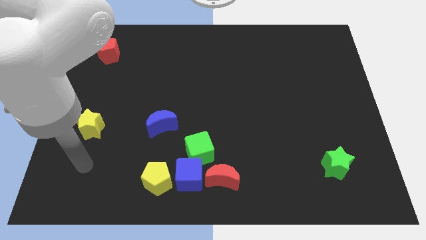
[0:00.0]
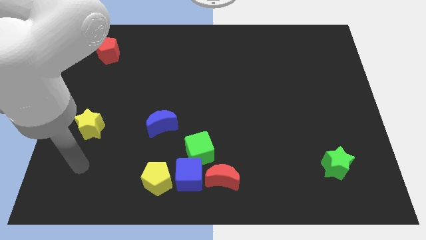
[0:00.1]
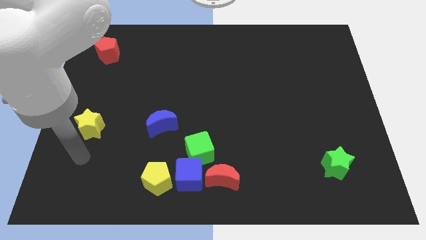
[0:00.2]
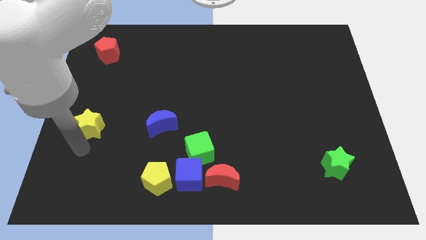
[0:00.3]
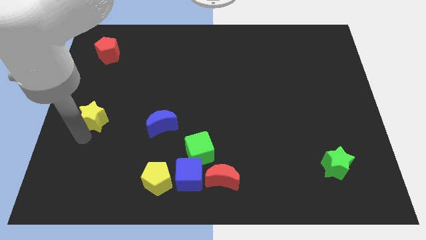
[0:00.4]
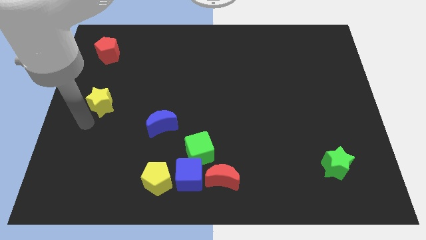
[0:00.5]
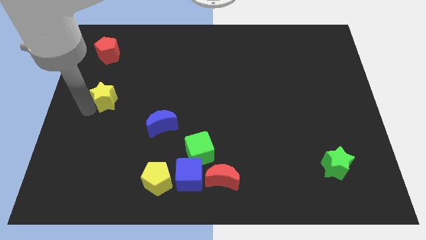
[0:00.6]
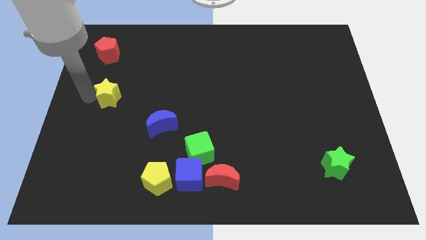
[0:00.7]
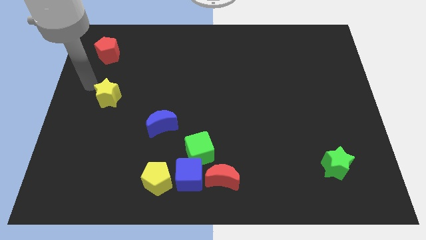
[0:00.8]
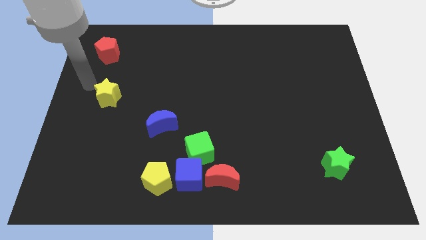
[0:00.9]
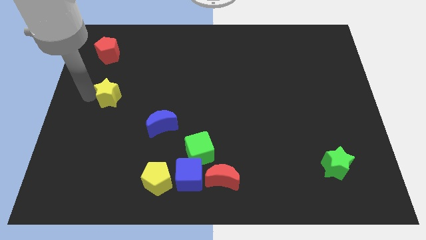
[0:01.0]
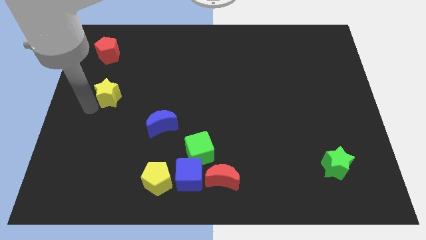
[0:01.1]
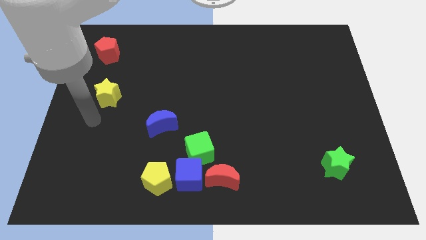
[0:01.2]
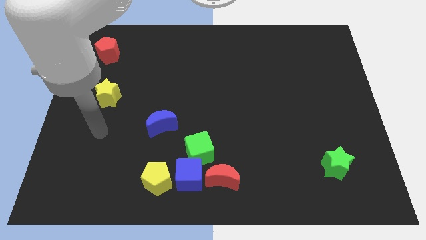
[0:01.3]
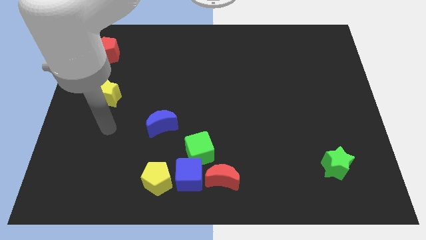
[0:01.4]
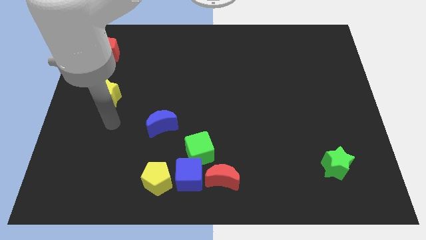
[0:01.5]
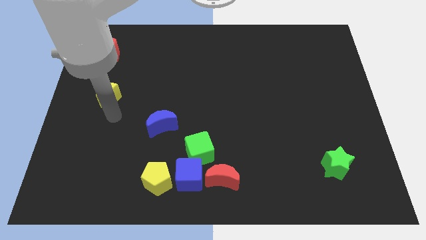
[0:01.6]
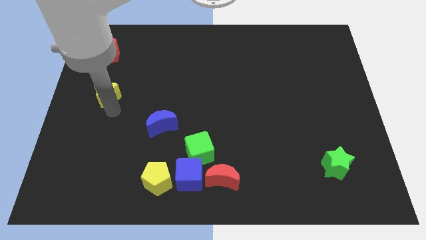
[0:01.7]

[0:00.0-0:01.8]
move the yellow star below the red pentagon

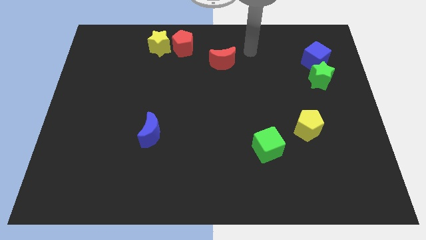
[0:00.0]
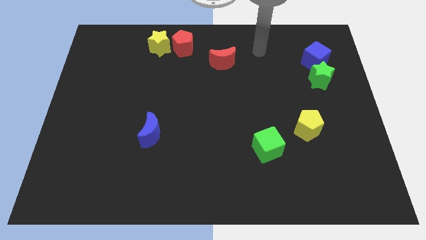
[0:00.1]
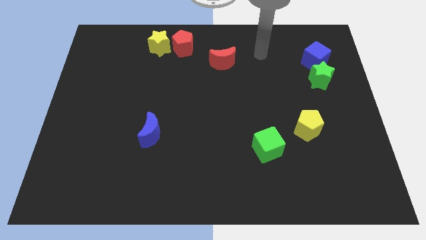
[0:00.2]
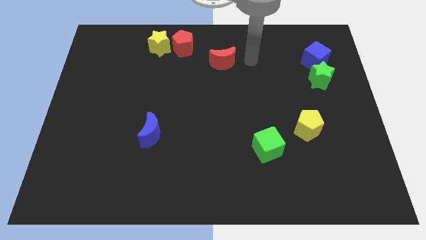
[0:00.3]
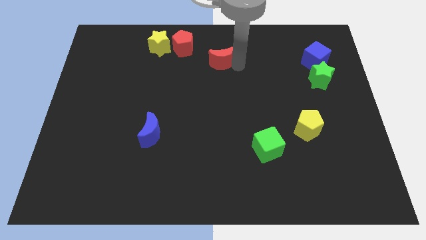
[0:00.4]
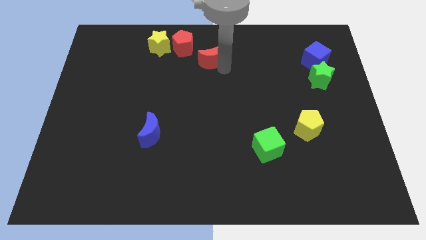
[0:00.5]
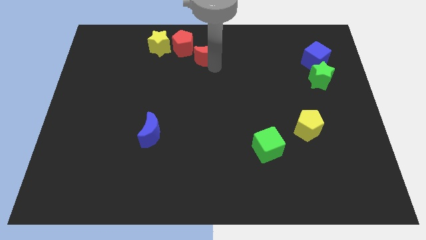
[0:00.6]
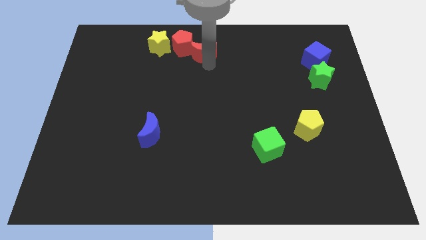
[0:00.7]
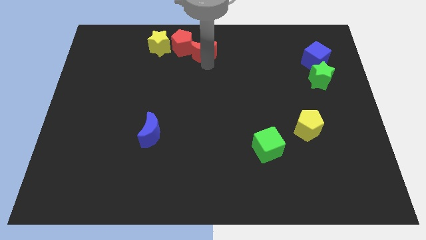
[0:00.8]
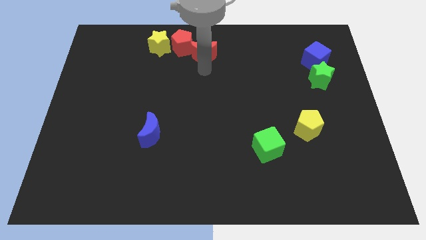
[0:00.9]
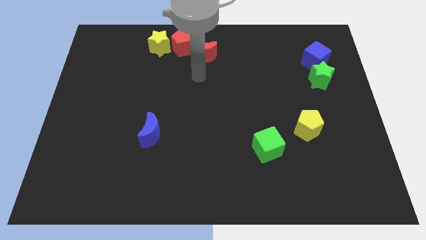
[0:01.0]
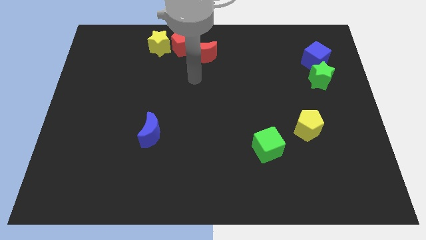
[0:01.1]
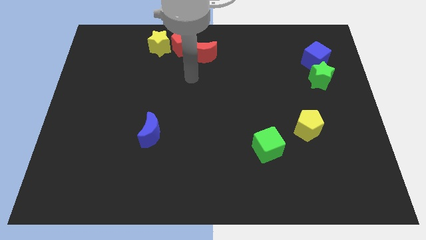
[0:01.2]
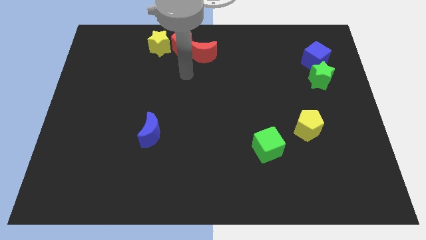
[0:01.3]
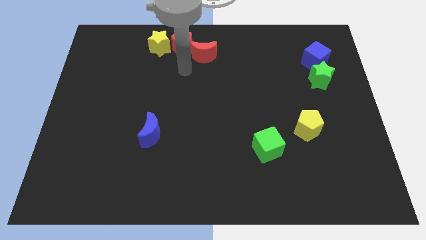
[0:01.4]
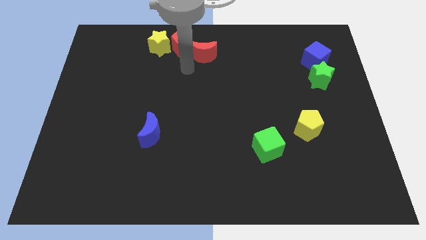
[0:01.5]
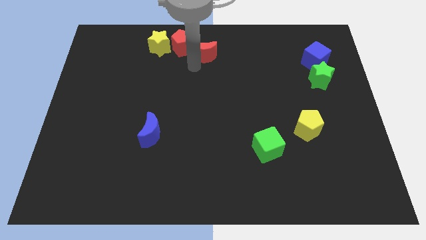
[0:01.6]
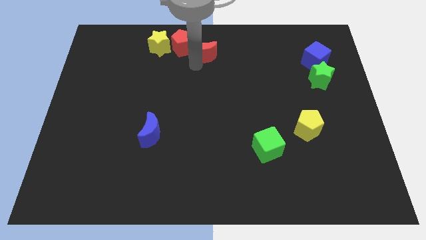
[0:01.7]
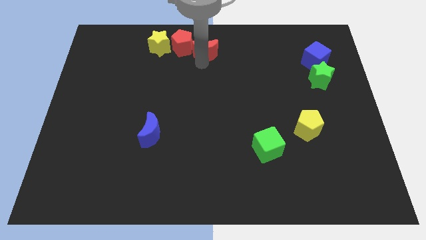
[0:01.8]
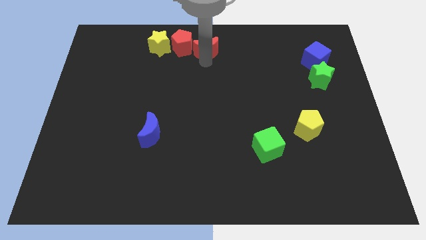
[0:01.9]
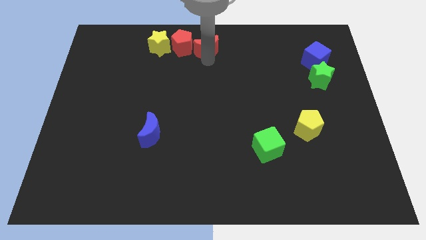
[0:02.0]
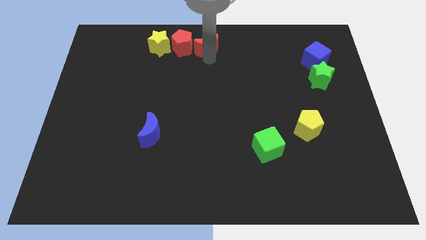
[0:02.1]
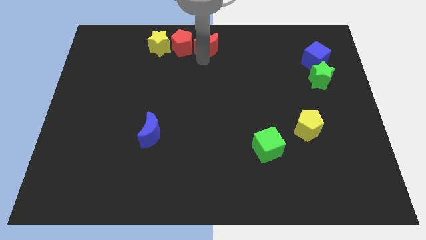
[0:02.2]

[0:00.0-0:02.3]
place the red moon to the right of the red pentagon

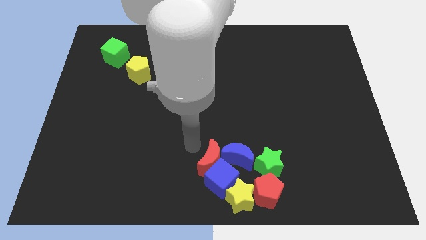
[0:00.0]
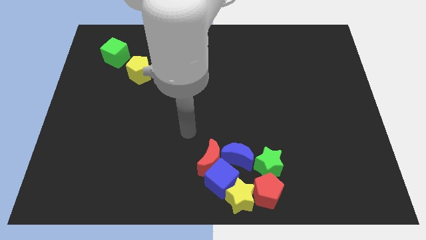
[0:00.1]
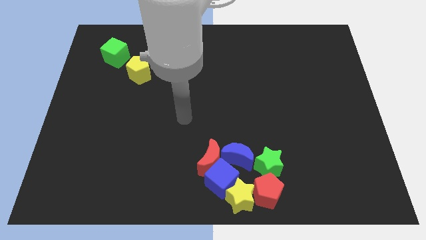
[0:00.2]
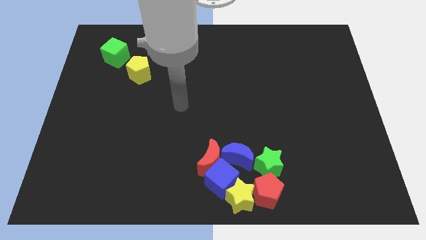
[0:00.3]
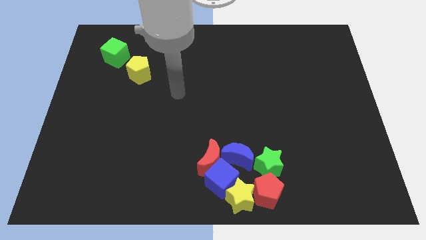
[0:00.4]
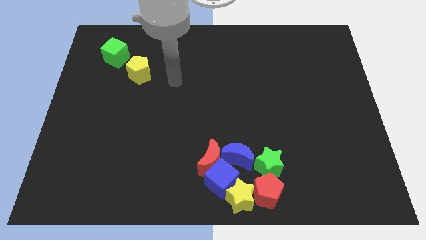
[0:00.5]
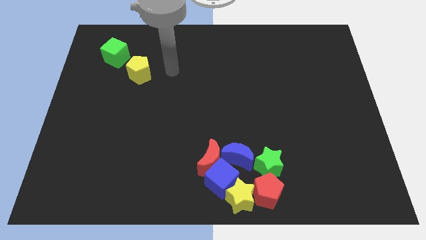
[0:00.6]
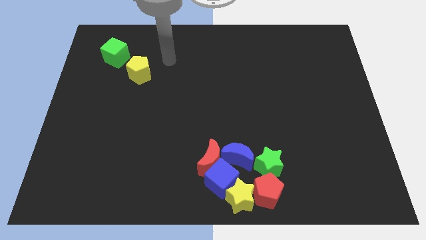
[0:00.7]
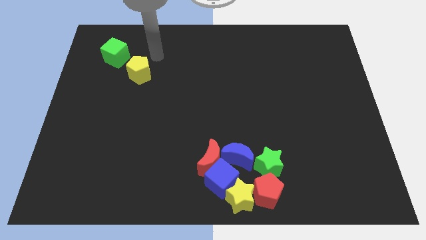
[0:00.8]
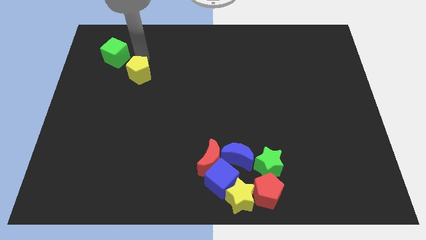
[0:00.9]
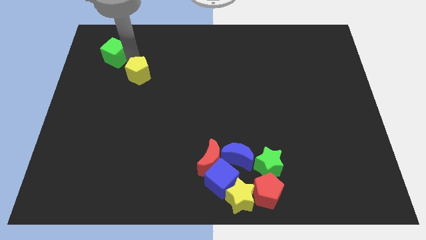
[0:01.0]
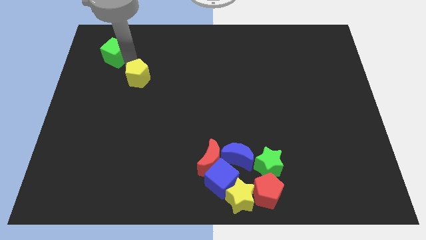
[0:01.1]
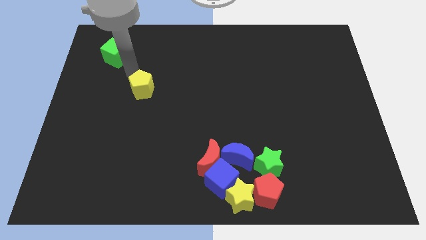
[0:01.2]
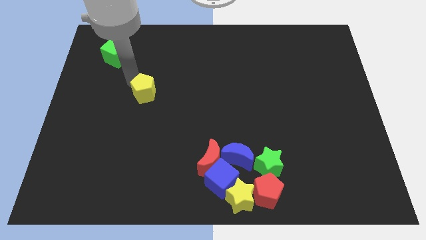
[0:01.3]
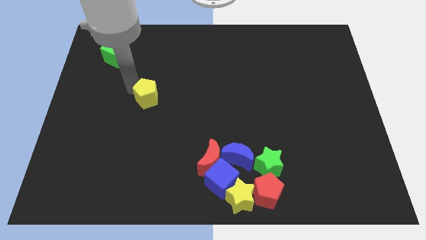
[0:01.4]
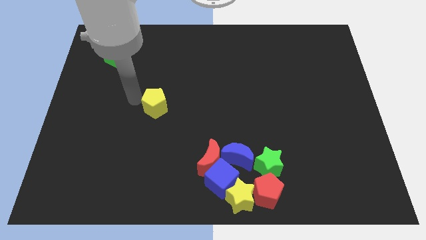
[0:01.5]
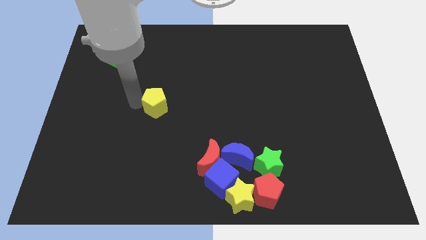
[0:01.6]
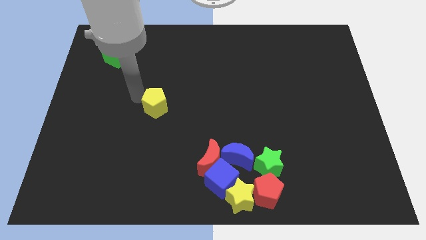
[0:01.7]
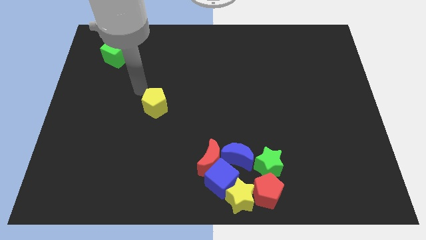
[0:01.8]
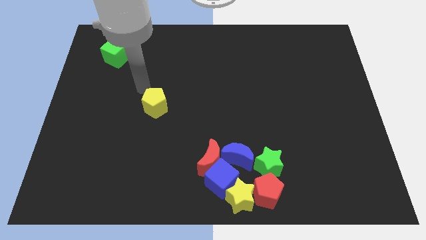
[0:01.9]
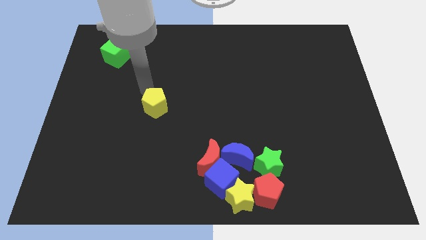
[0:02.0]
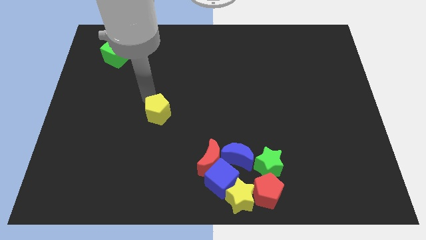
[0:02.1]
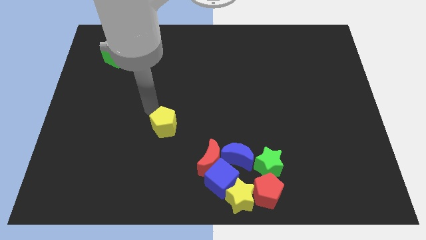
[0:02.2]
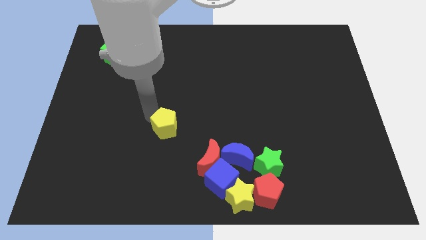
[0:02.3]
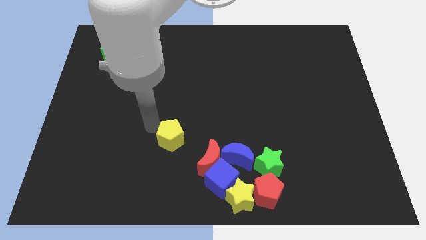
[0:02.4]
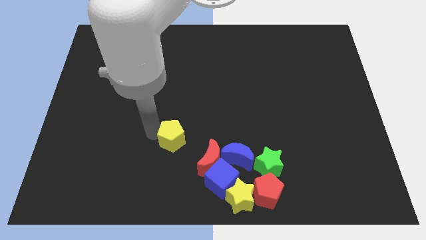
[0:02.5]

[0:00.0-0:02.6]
move the yellow pentagon towards the bottom

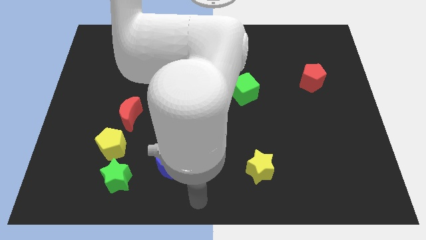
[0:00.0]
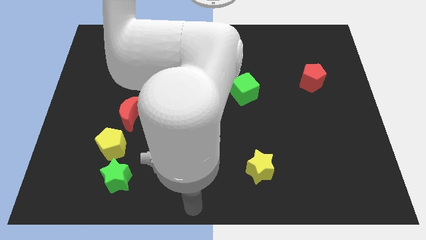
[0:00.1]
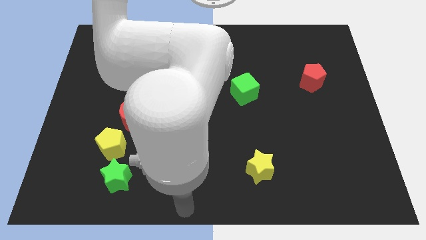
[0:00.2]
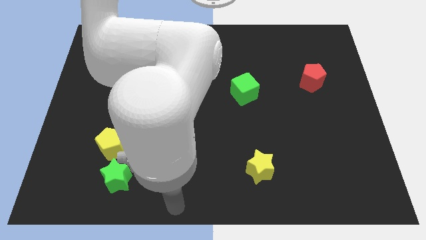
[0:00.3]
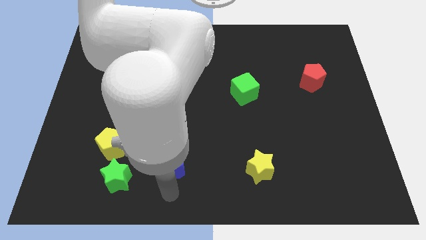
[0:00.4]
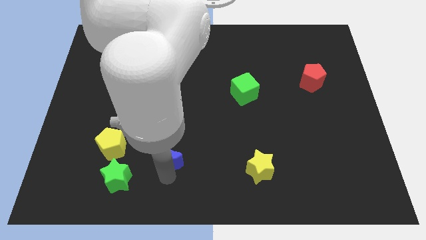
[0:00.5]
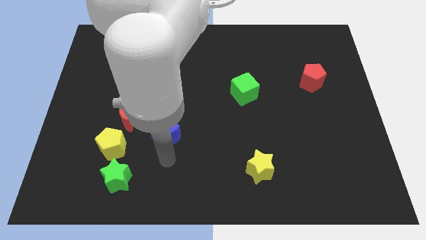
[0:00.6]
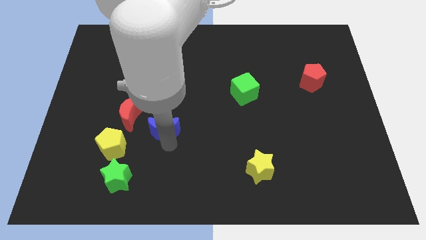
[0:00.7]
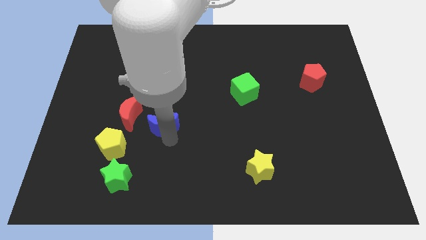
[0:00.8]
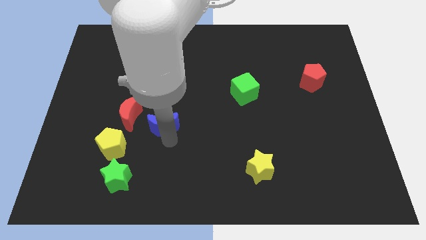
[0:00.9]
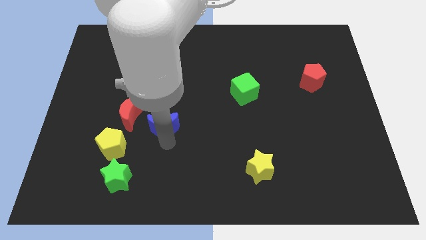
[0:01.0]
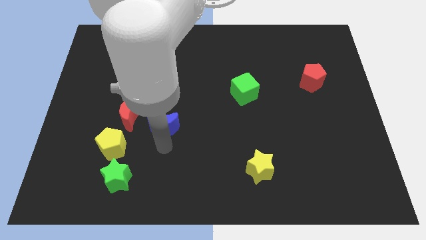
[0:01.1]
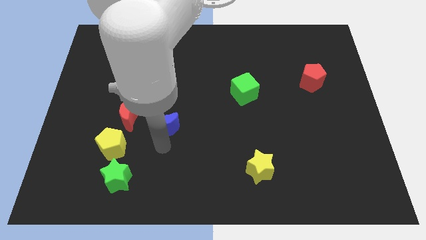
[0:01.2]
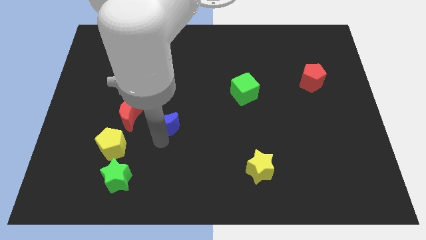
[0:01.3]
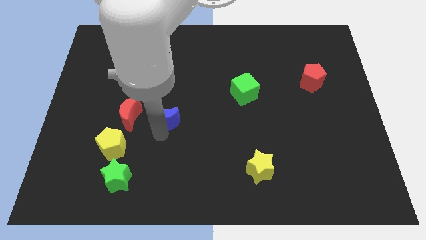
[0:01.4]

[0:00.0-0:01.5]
push the blue crescent to the right of the red moon

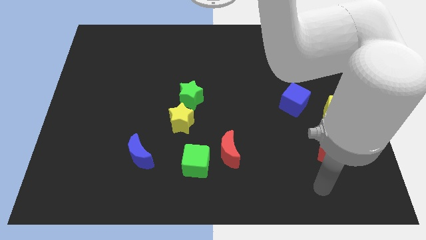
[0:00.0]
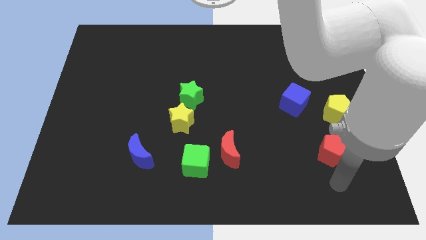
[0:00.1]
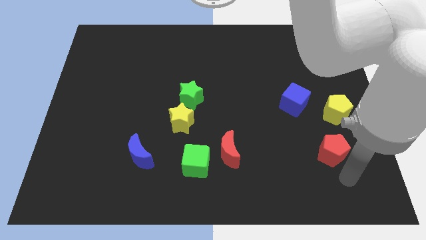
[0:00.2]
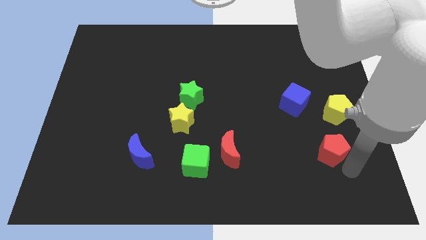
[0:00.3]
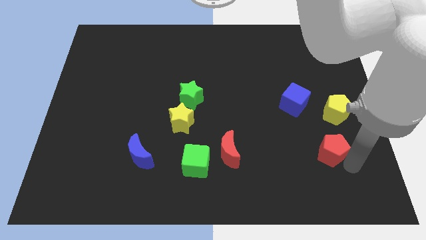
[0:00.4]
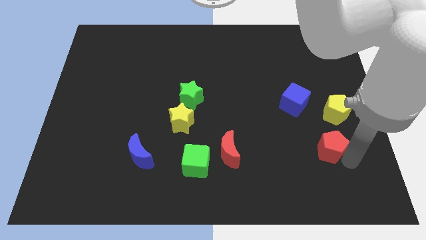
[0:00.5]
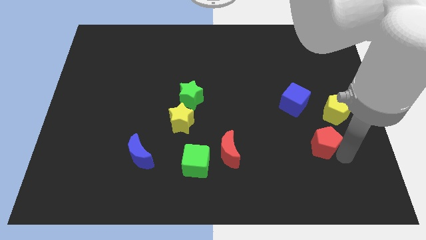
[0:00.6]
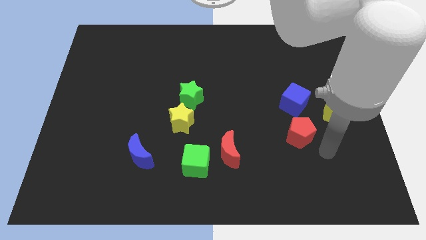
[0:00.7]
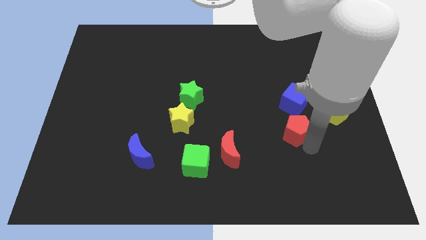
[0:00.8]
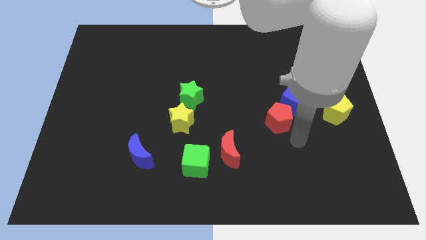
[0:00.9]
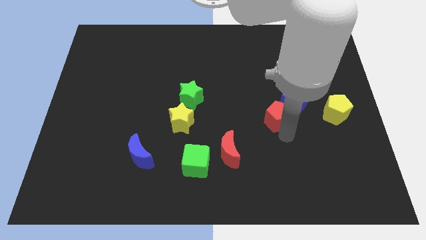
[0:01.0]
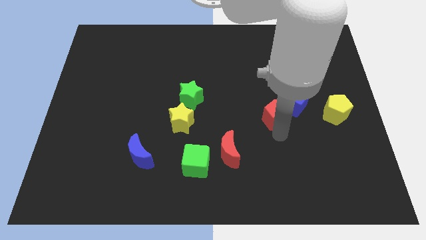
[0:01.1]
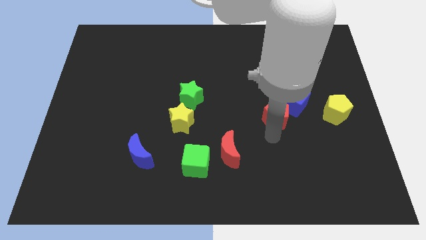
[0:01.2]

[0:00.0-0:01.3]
move the red pentagon to the bottom left of the blue cube
